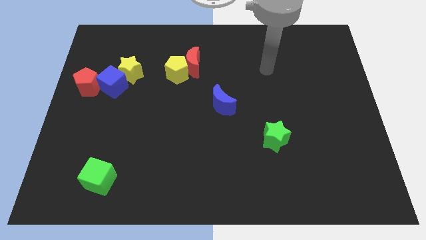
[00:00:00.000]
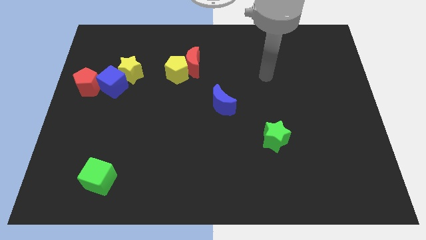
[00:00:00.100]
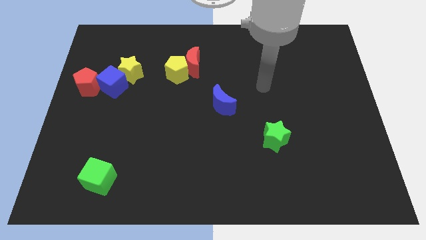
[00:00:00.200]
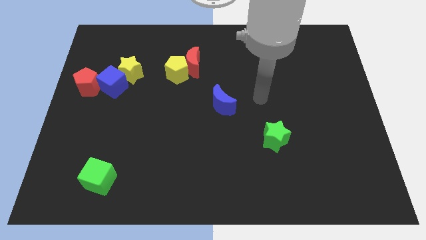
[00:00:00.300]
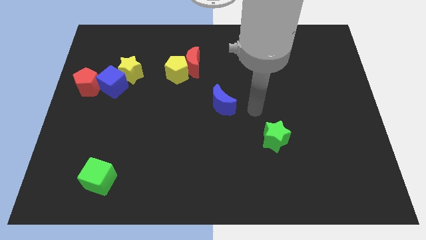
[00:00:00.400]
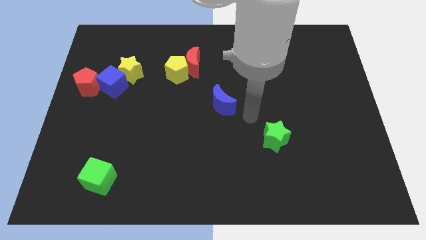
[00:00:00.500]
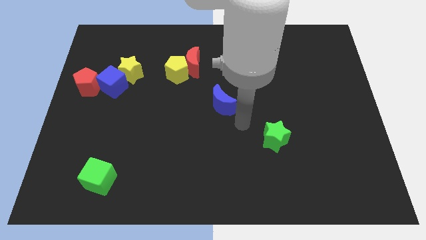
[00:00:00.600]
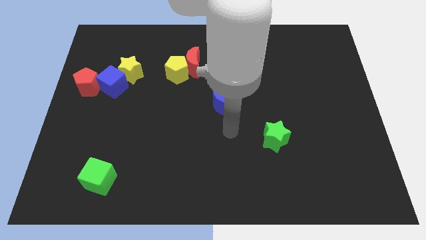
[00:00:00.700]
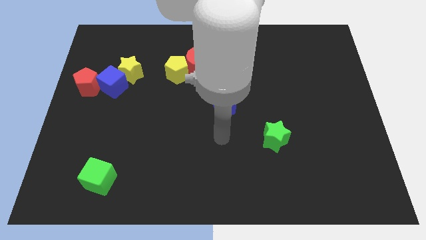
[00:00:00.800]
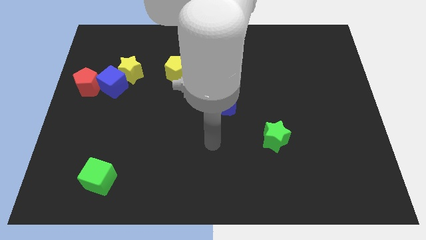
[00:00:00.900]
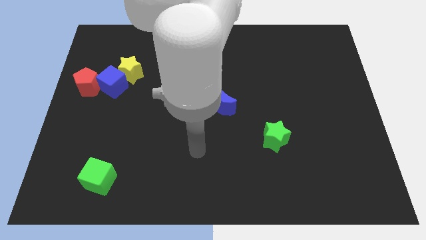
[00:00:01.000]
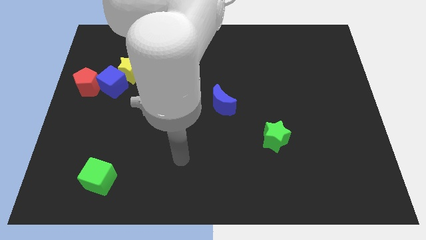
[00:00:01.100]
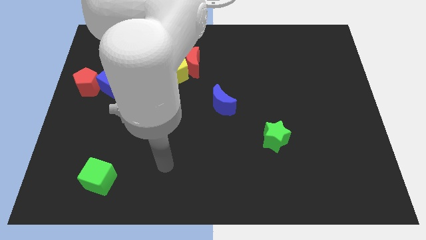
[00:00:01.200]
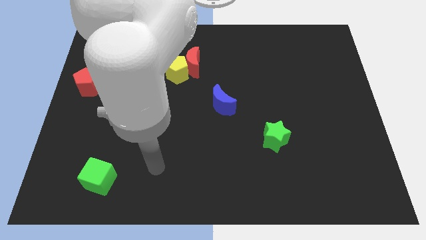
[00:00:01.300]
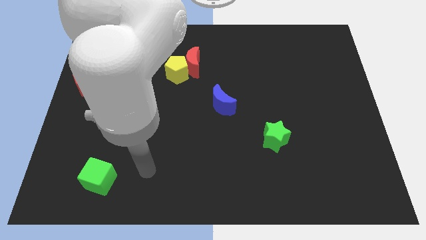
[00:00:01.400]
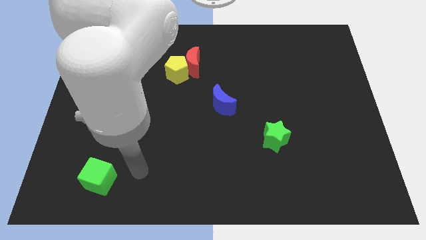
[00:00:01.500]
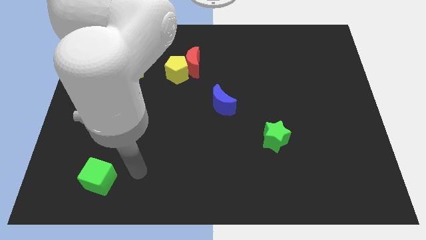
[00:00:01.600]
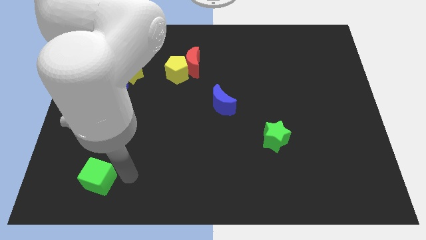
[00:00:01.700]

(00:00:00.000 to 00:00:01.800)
move the arm at the right side of the green cube

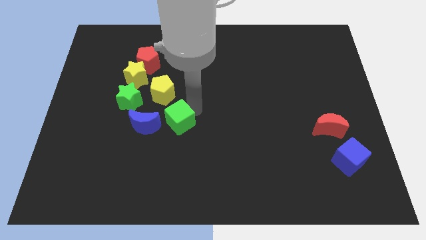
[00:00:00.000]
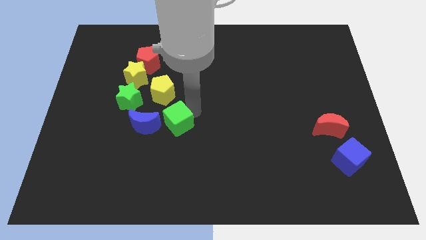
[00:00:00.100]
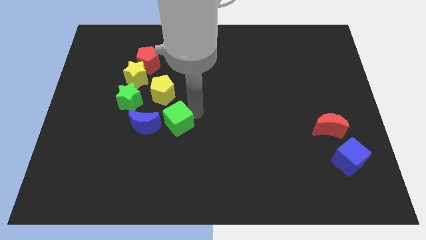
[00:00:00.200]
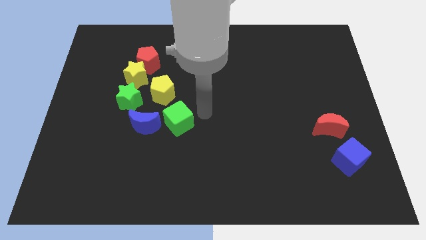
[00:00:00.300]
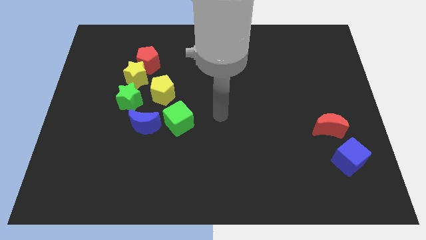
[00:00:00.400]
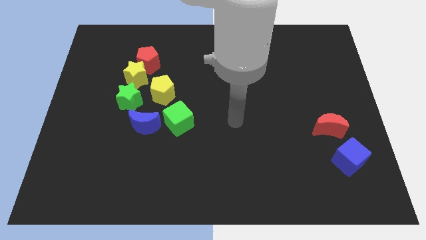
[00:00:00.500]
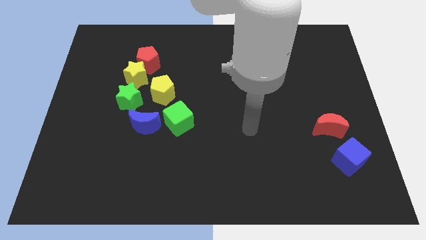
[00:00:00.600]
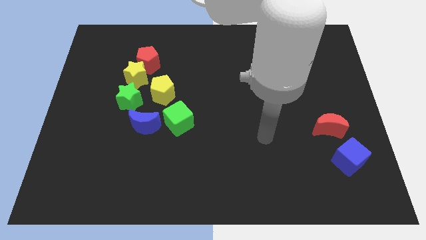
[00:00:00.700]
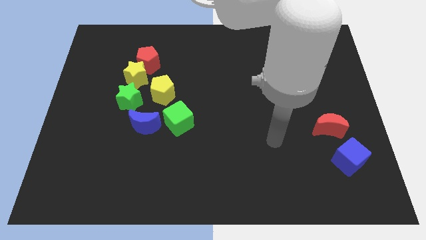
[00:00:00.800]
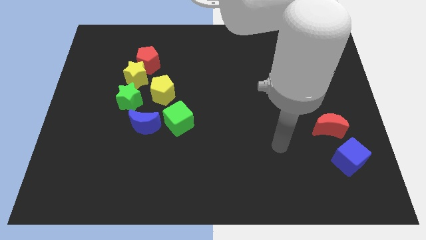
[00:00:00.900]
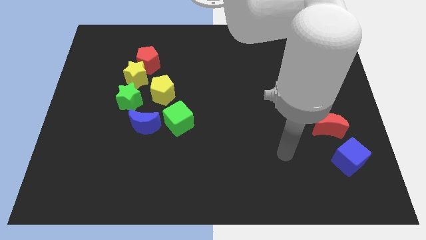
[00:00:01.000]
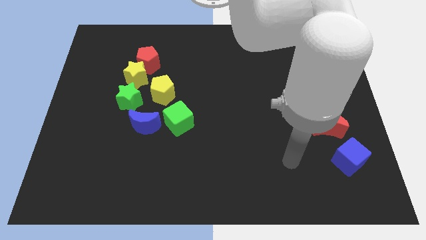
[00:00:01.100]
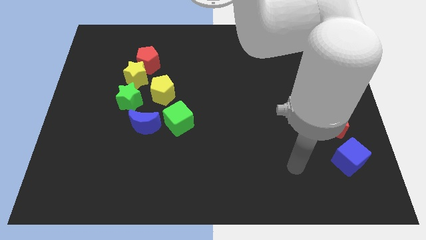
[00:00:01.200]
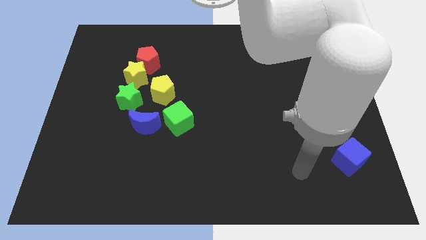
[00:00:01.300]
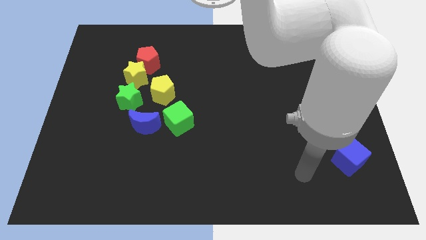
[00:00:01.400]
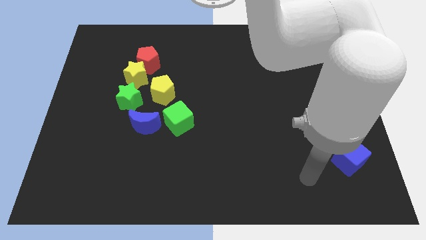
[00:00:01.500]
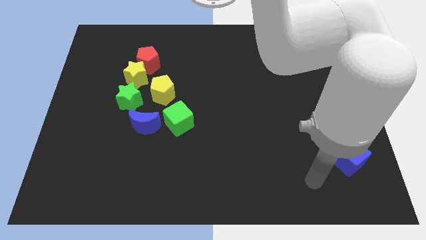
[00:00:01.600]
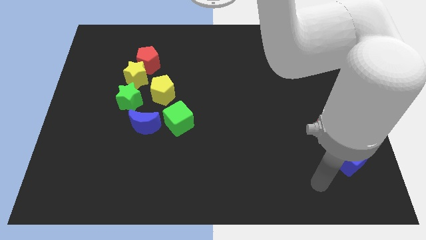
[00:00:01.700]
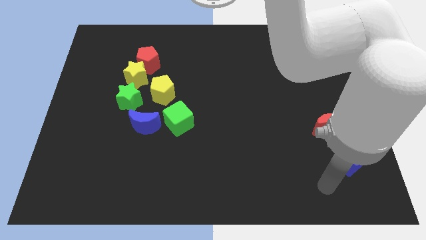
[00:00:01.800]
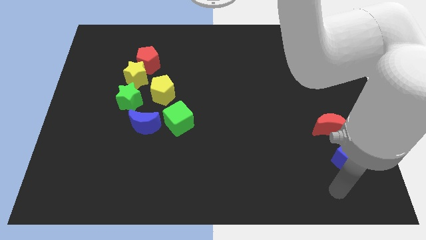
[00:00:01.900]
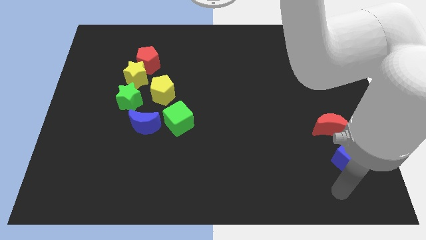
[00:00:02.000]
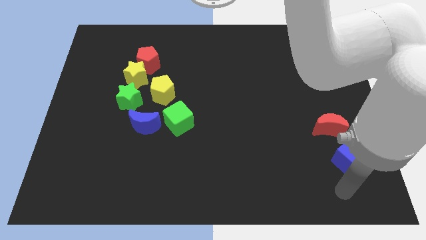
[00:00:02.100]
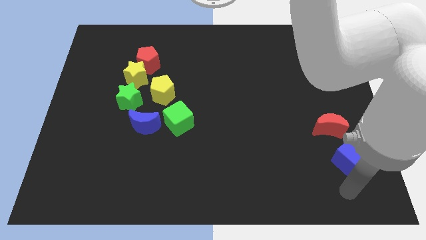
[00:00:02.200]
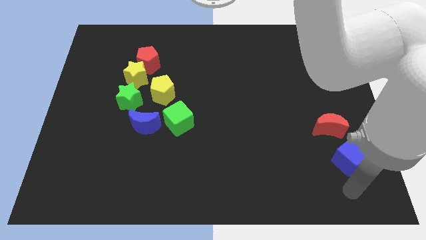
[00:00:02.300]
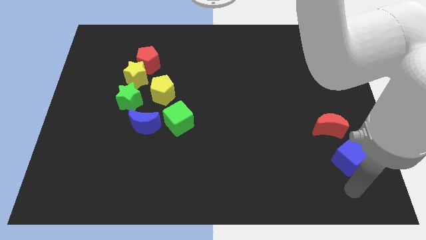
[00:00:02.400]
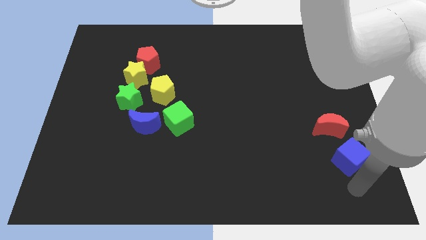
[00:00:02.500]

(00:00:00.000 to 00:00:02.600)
move the arm away from the green cube

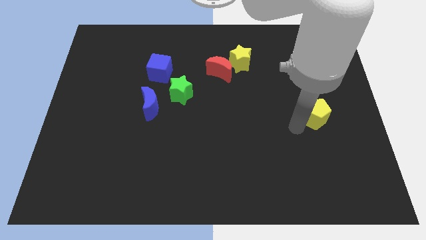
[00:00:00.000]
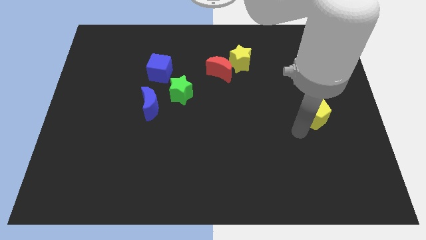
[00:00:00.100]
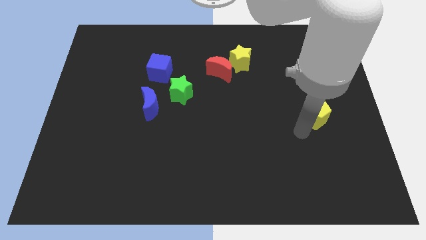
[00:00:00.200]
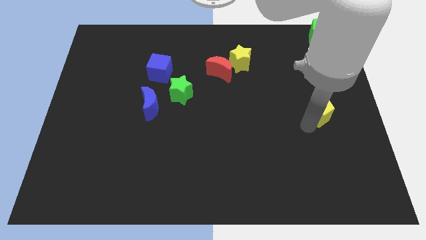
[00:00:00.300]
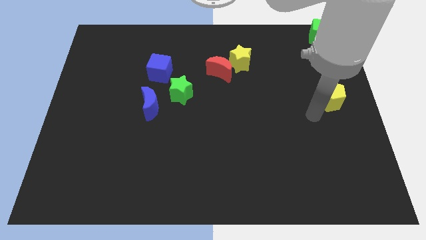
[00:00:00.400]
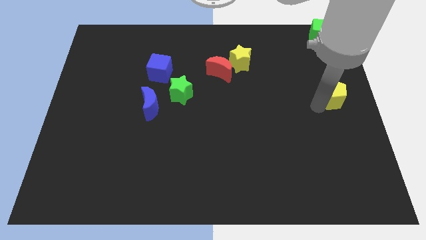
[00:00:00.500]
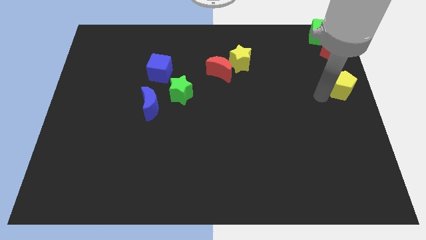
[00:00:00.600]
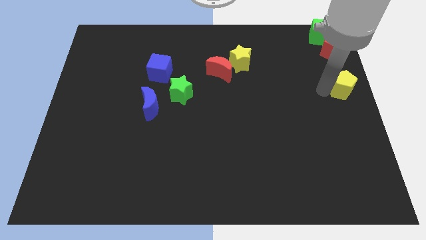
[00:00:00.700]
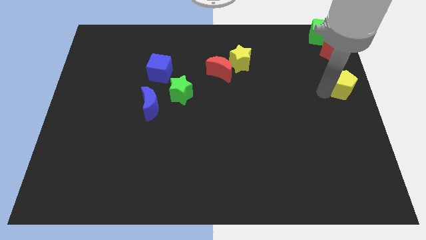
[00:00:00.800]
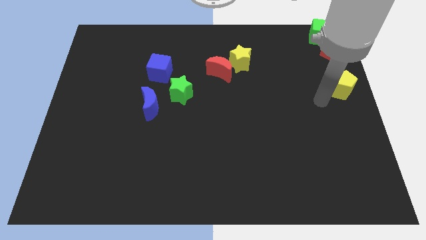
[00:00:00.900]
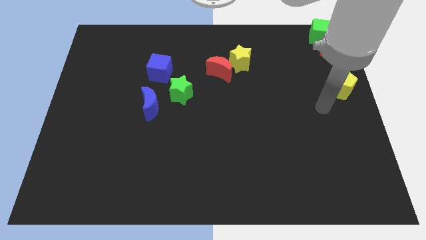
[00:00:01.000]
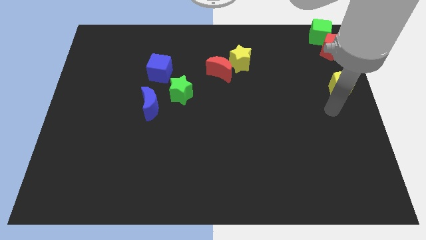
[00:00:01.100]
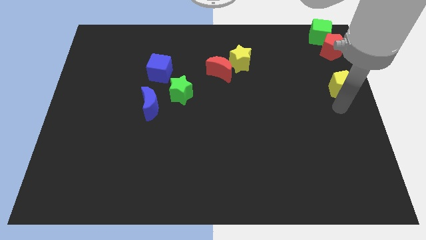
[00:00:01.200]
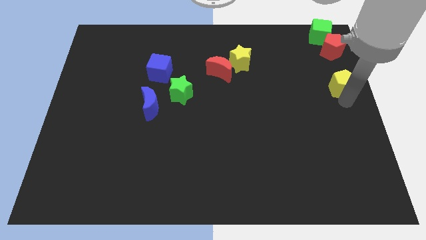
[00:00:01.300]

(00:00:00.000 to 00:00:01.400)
place yellow pentagon below the red pentagon

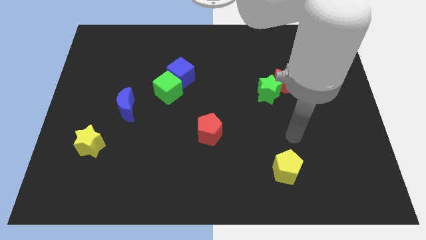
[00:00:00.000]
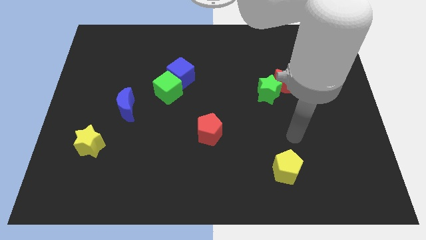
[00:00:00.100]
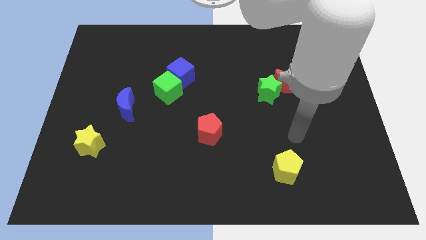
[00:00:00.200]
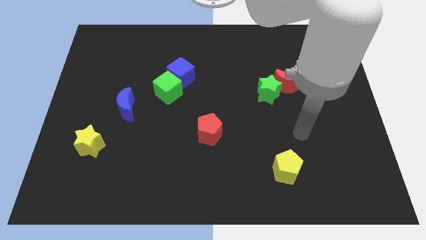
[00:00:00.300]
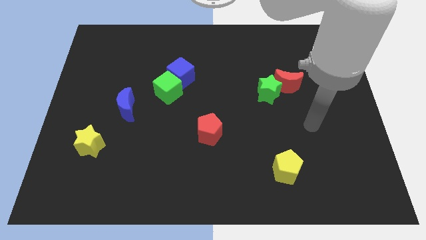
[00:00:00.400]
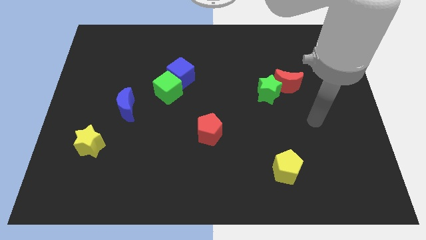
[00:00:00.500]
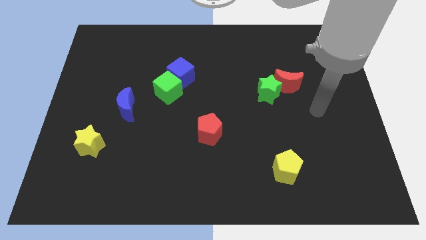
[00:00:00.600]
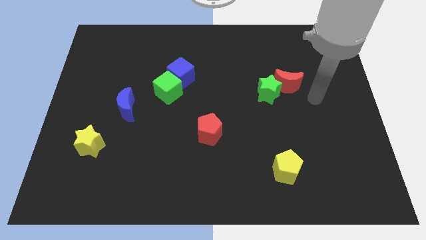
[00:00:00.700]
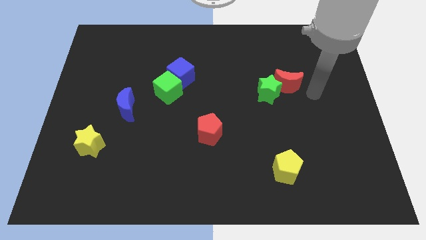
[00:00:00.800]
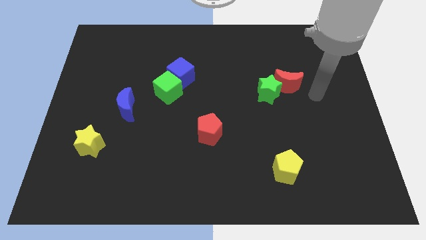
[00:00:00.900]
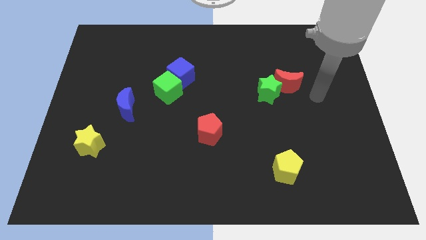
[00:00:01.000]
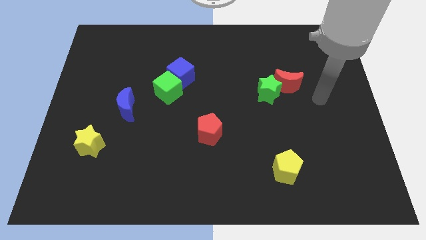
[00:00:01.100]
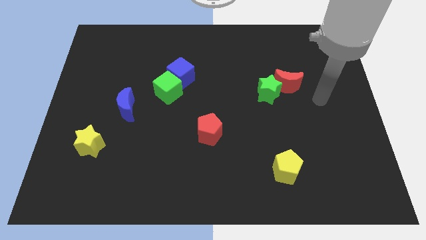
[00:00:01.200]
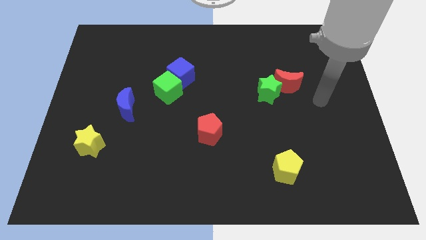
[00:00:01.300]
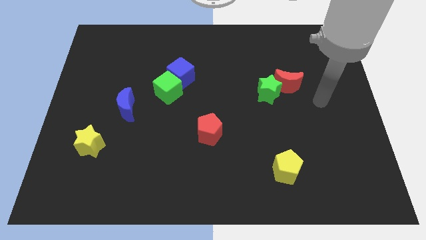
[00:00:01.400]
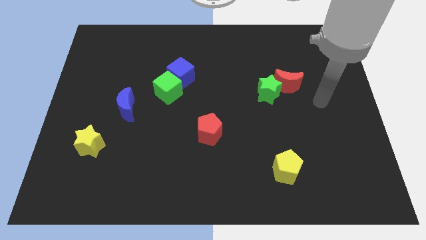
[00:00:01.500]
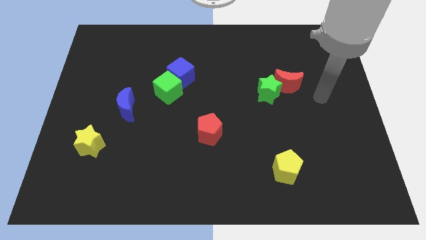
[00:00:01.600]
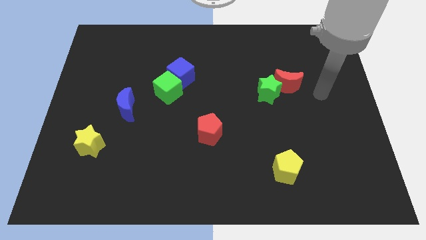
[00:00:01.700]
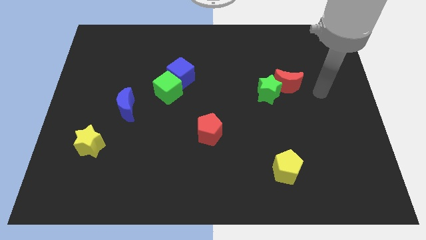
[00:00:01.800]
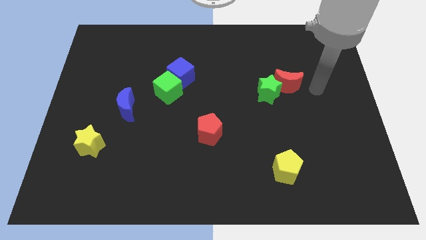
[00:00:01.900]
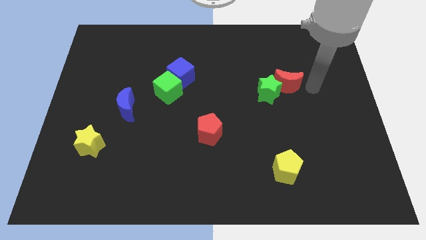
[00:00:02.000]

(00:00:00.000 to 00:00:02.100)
place your arm at the right of the red crescent

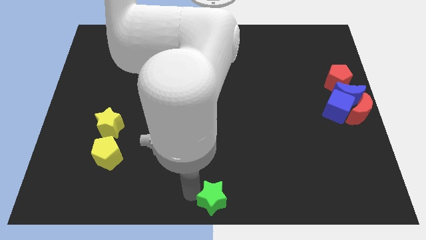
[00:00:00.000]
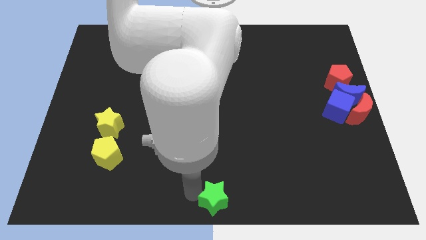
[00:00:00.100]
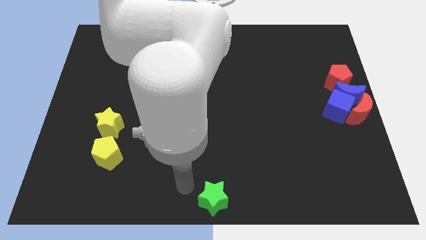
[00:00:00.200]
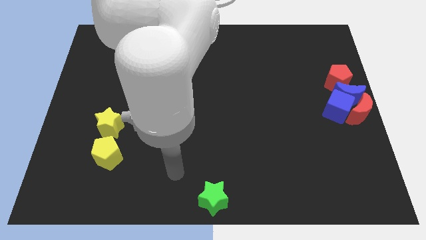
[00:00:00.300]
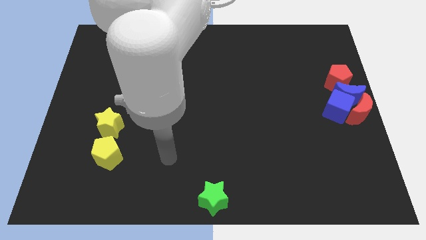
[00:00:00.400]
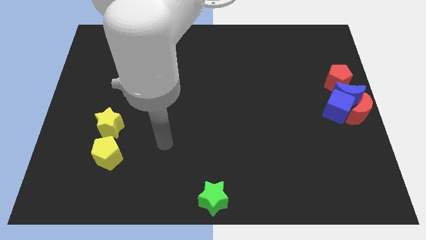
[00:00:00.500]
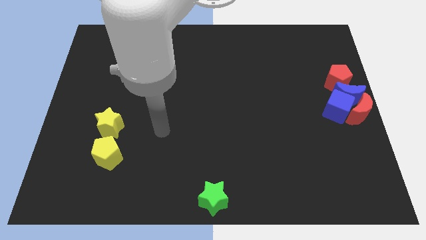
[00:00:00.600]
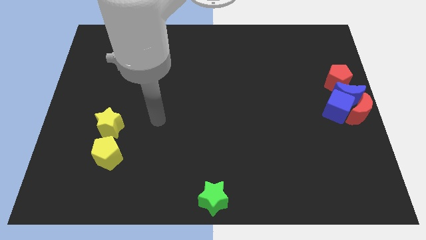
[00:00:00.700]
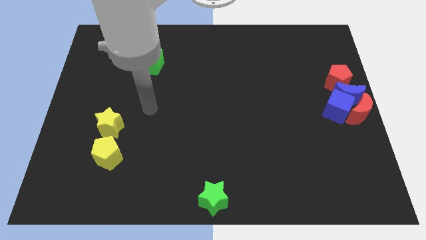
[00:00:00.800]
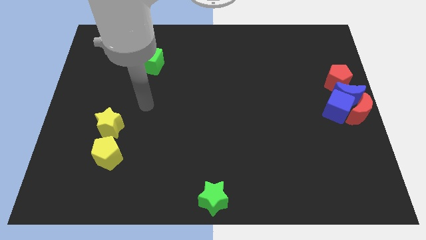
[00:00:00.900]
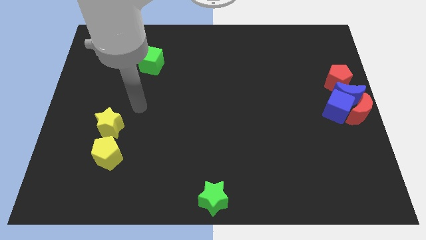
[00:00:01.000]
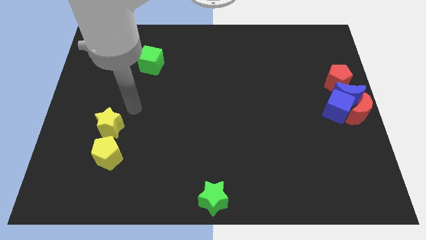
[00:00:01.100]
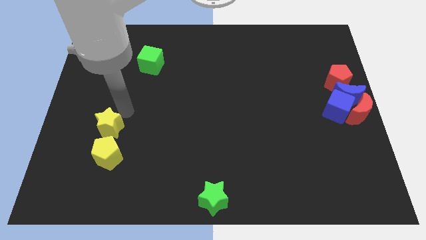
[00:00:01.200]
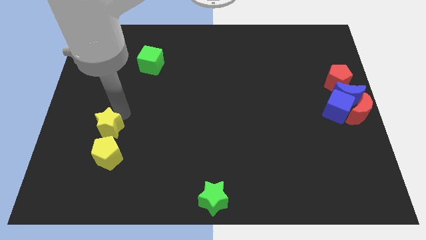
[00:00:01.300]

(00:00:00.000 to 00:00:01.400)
move your arm away from the green star
